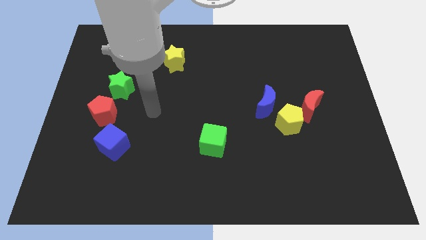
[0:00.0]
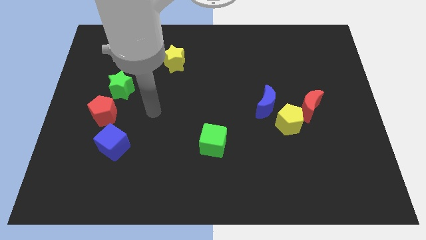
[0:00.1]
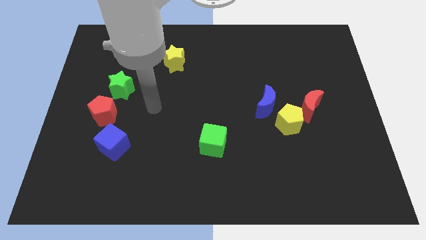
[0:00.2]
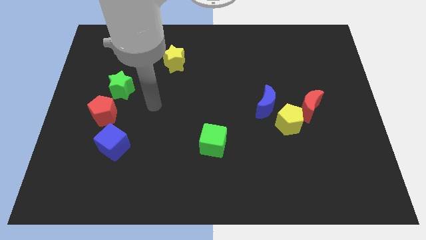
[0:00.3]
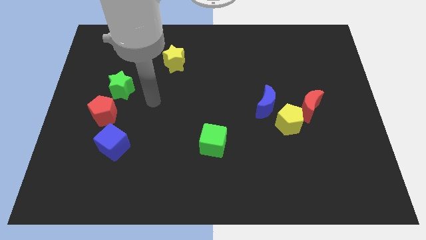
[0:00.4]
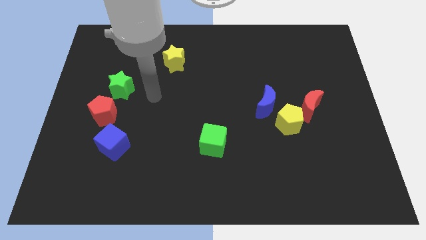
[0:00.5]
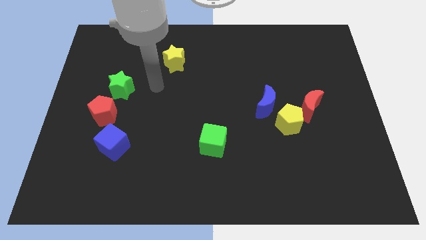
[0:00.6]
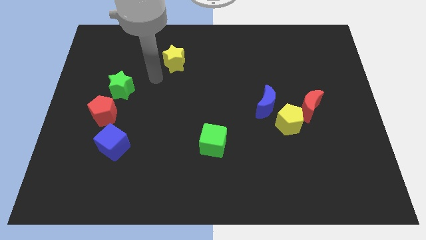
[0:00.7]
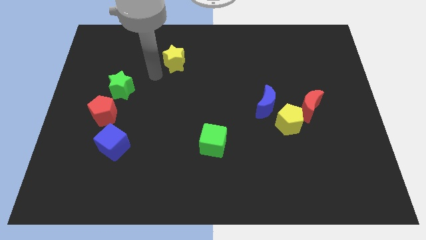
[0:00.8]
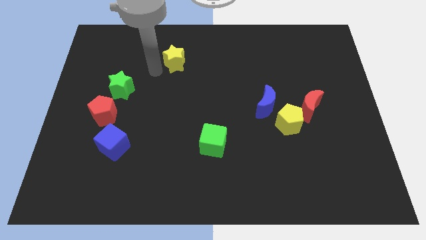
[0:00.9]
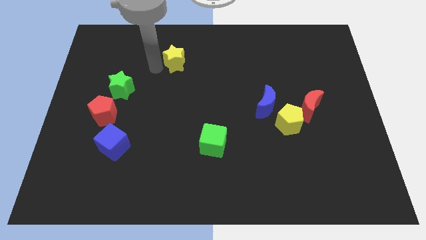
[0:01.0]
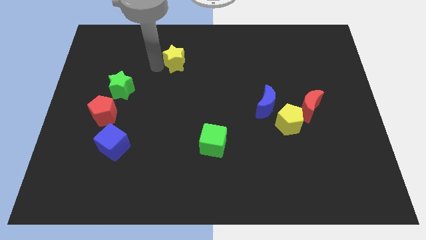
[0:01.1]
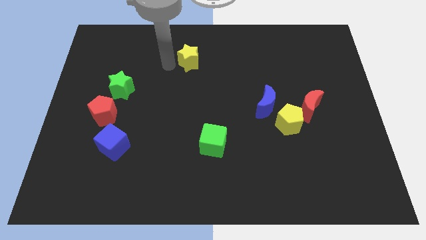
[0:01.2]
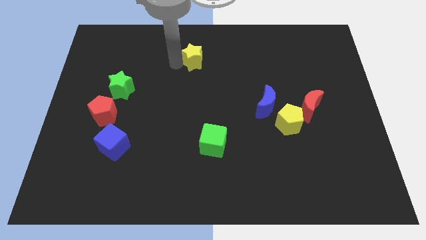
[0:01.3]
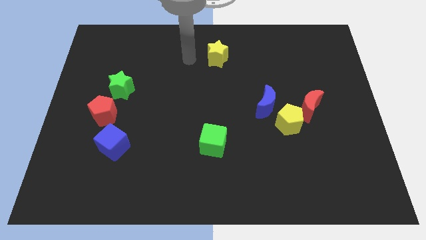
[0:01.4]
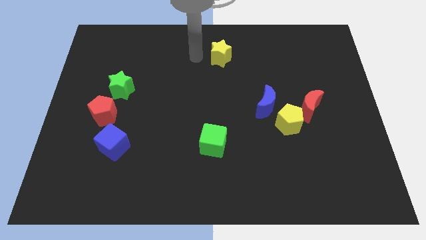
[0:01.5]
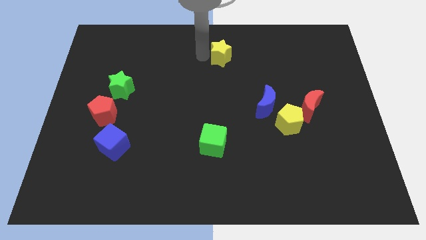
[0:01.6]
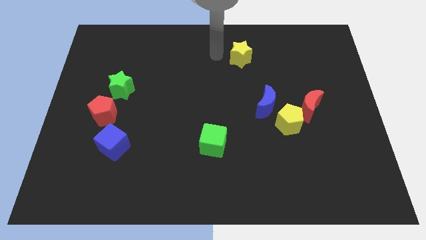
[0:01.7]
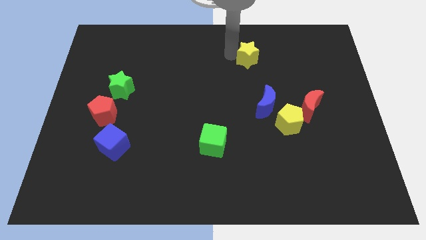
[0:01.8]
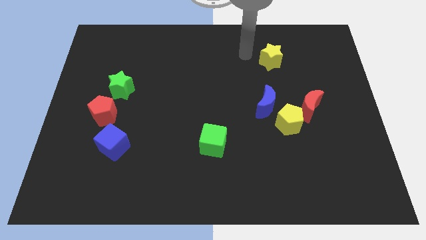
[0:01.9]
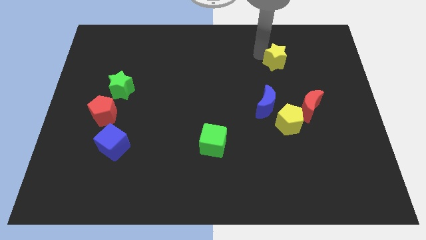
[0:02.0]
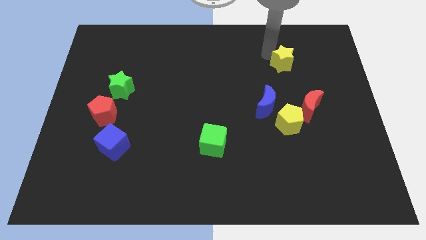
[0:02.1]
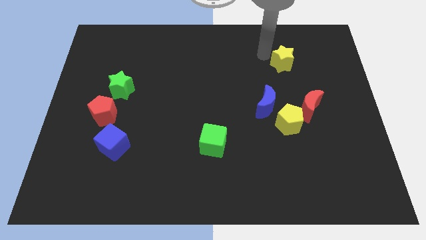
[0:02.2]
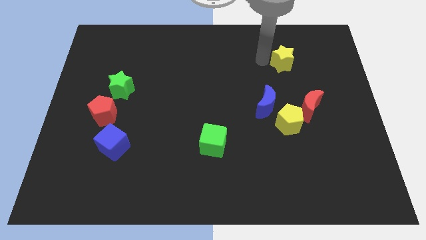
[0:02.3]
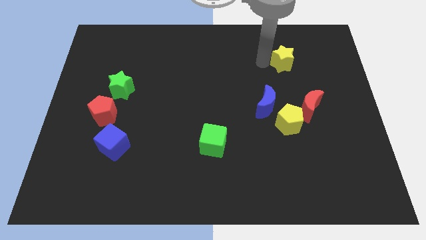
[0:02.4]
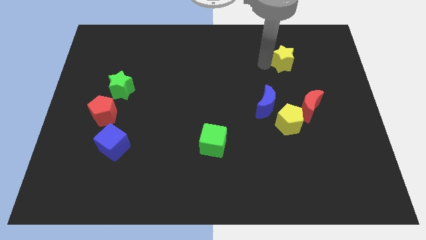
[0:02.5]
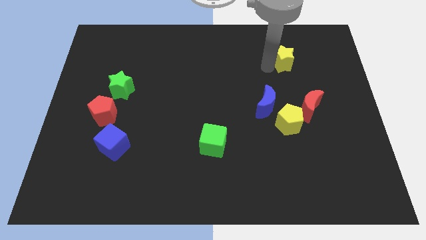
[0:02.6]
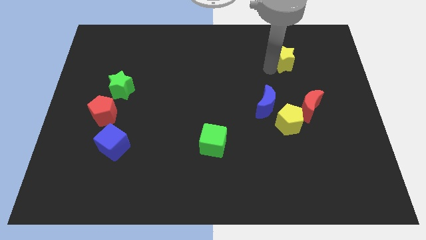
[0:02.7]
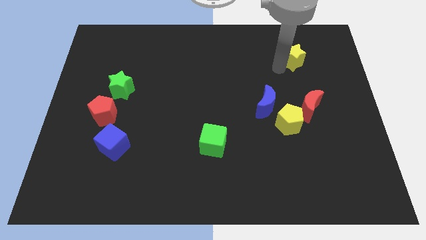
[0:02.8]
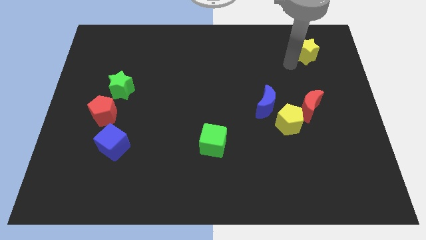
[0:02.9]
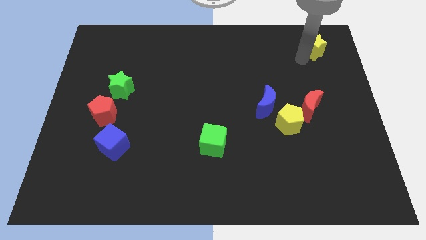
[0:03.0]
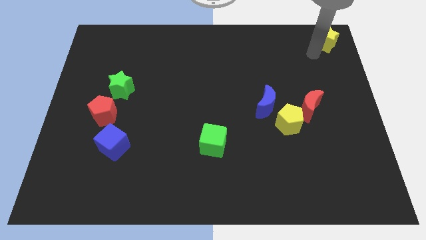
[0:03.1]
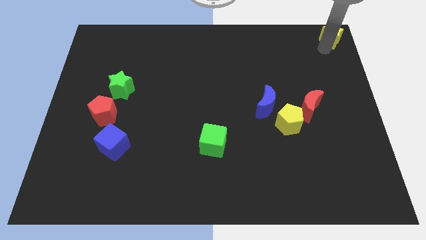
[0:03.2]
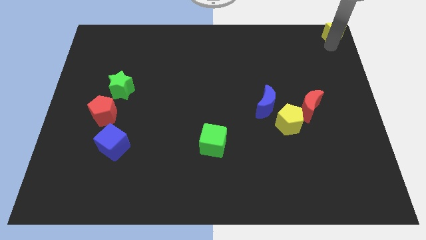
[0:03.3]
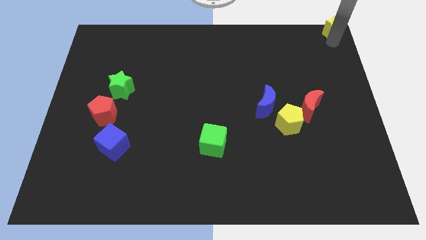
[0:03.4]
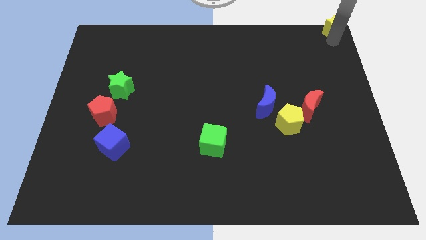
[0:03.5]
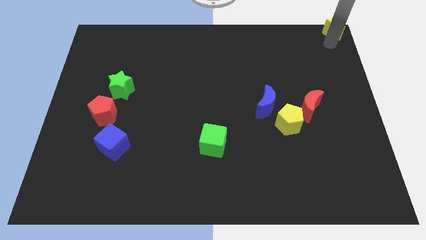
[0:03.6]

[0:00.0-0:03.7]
move the yellow star to the top right

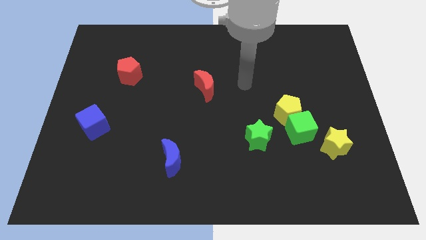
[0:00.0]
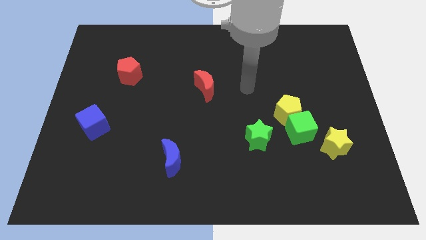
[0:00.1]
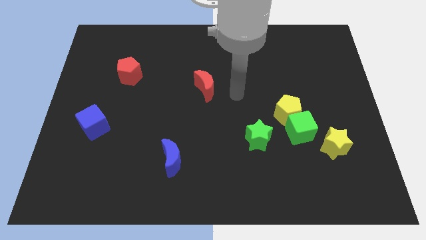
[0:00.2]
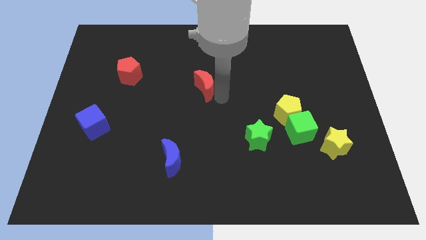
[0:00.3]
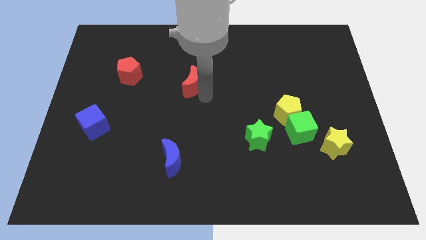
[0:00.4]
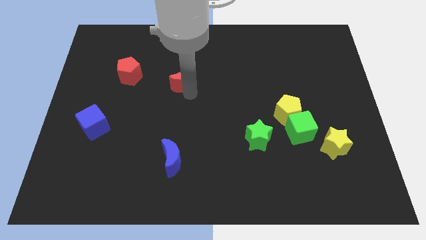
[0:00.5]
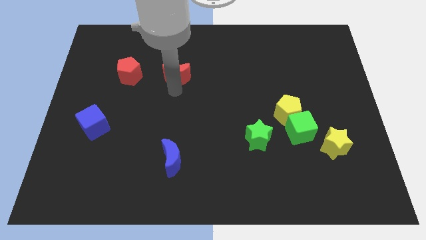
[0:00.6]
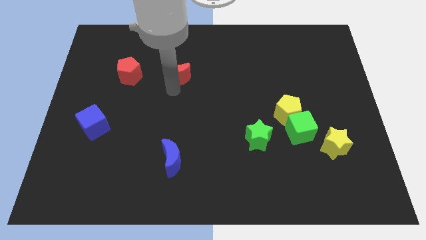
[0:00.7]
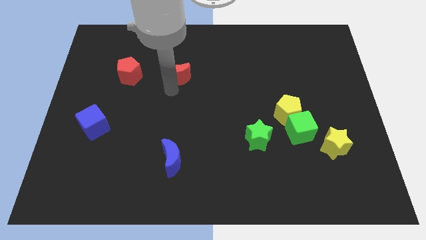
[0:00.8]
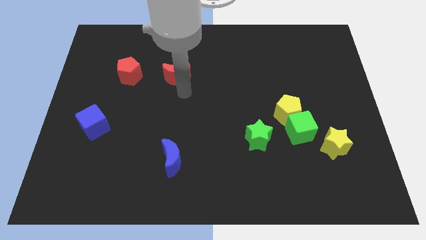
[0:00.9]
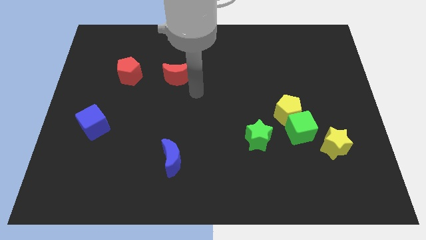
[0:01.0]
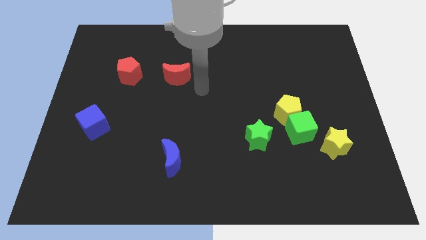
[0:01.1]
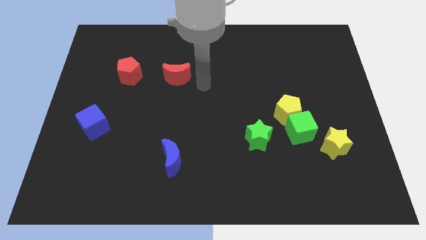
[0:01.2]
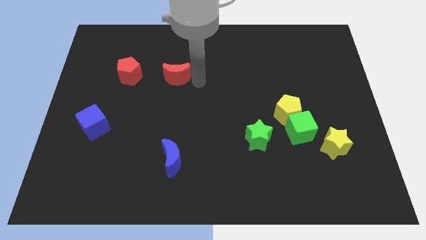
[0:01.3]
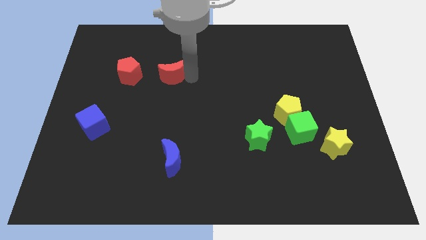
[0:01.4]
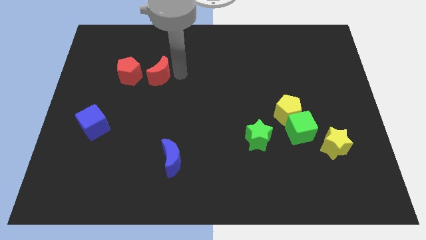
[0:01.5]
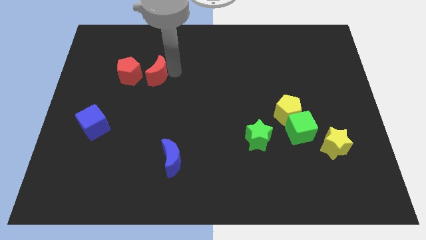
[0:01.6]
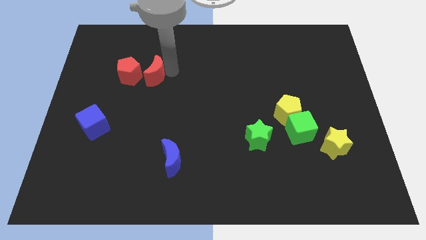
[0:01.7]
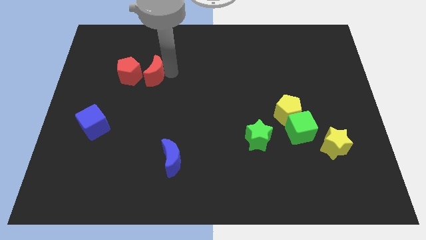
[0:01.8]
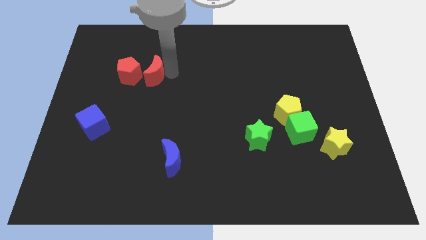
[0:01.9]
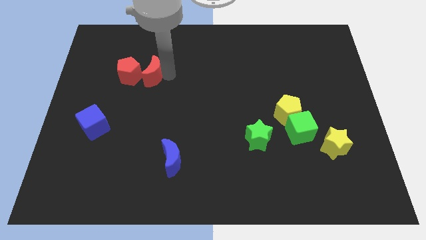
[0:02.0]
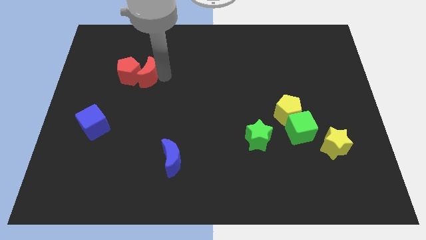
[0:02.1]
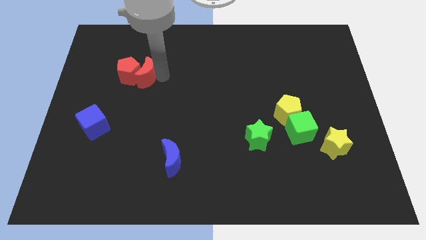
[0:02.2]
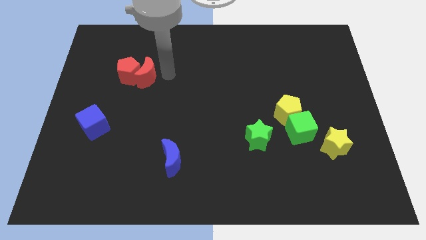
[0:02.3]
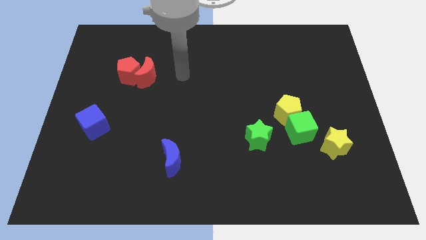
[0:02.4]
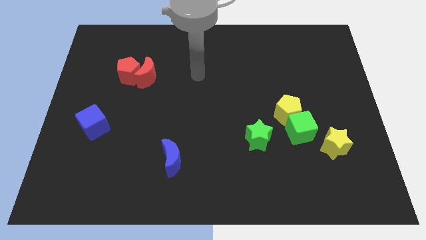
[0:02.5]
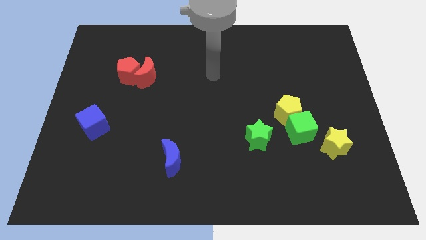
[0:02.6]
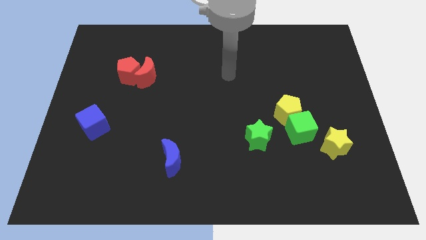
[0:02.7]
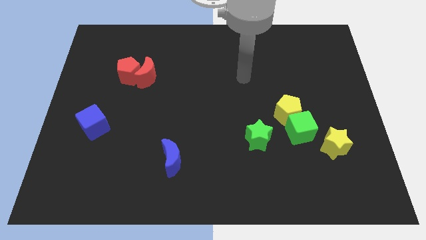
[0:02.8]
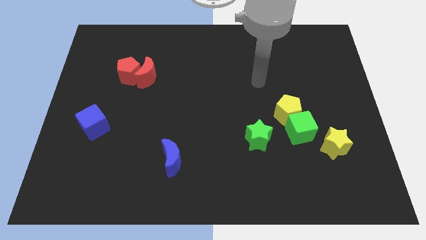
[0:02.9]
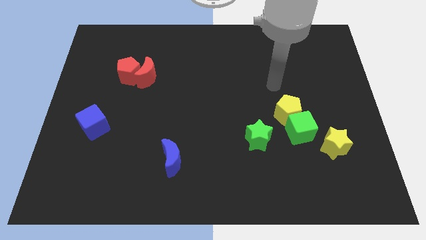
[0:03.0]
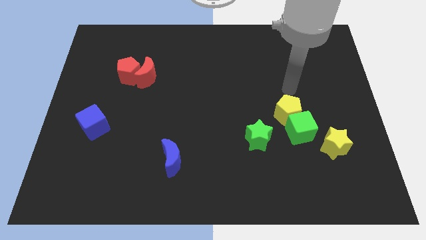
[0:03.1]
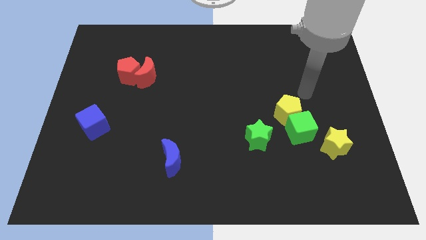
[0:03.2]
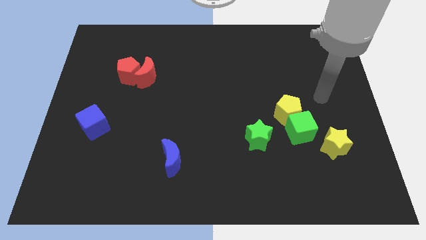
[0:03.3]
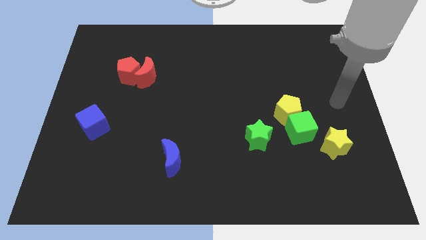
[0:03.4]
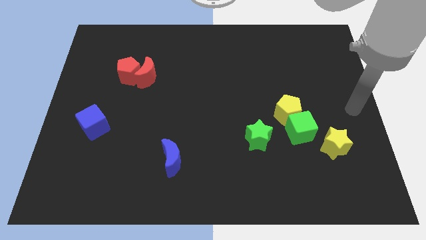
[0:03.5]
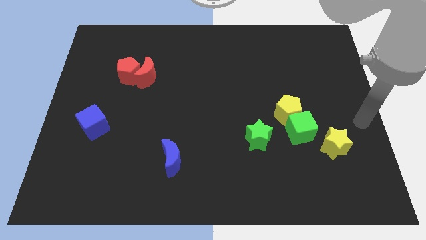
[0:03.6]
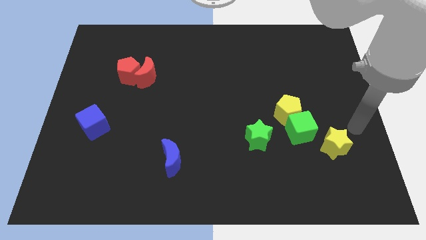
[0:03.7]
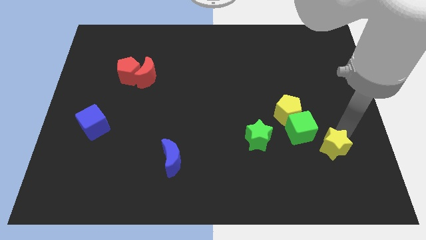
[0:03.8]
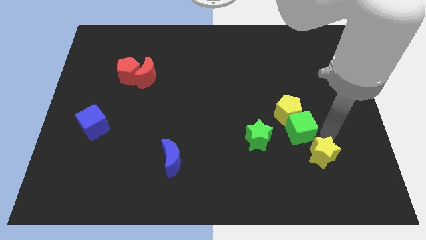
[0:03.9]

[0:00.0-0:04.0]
move red moon close to the red pentagon

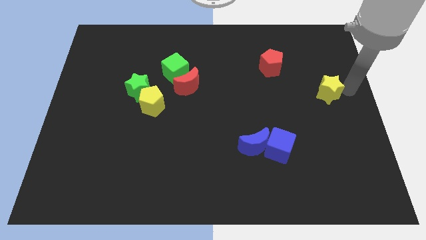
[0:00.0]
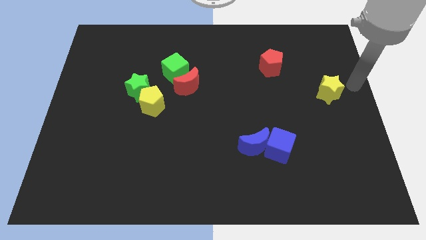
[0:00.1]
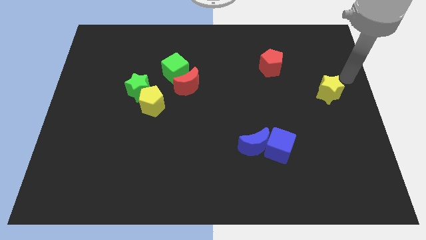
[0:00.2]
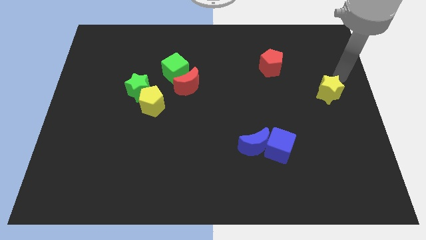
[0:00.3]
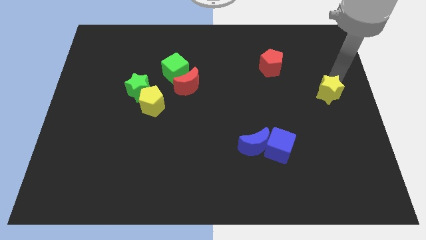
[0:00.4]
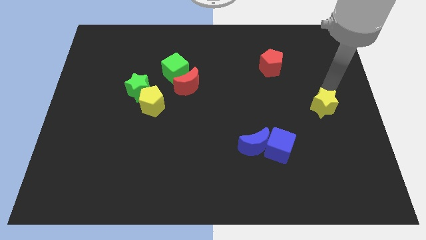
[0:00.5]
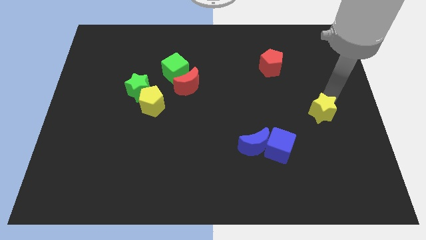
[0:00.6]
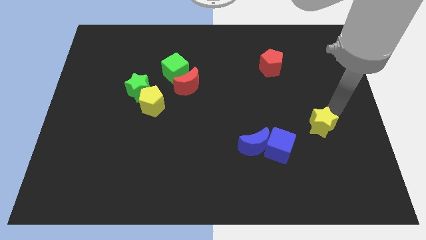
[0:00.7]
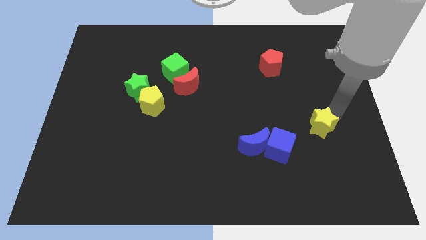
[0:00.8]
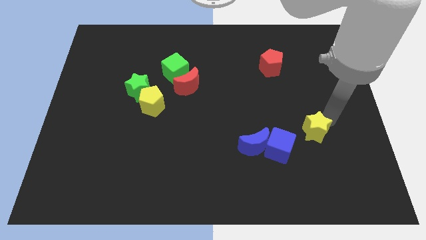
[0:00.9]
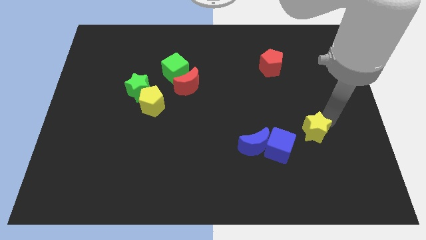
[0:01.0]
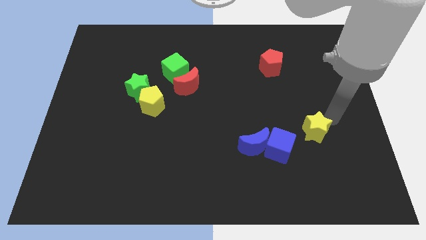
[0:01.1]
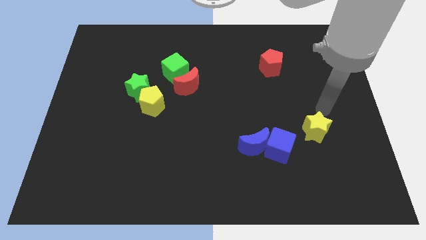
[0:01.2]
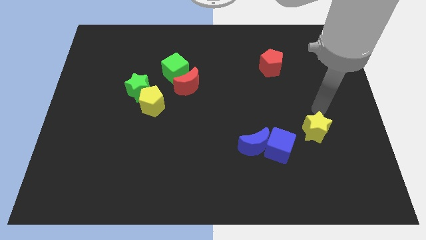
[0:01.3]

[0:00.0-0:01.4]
push yellow star downwards
